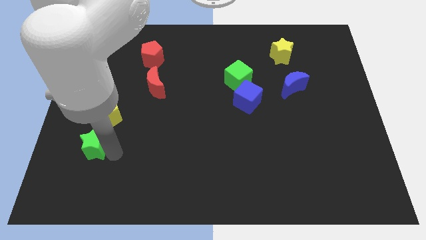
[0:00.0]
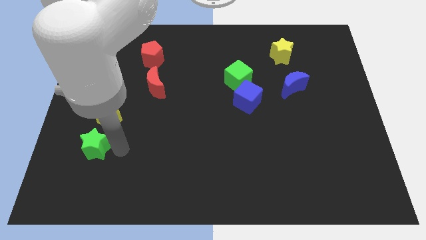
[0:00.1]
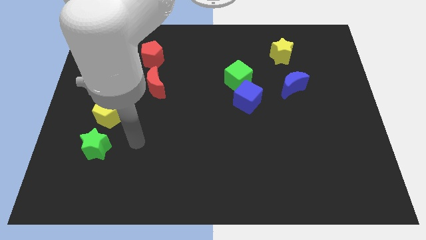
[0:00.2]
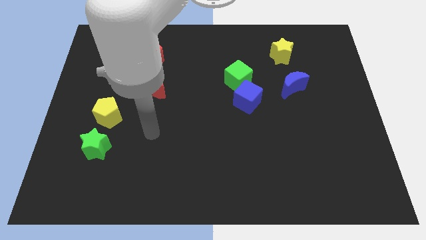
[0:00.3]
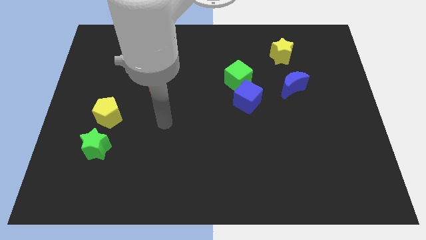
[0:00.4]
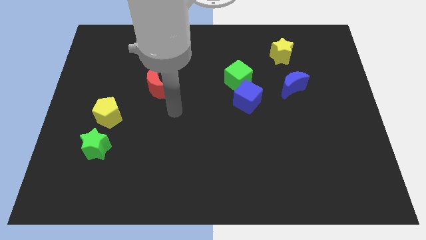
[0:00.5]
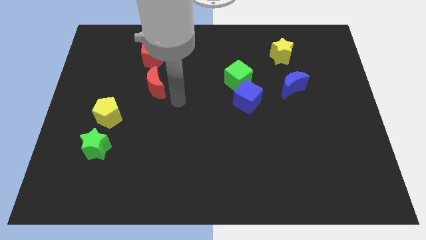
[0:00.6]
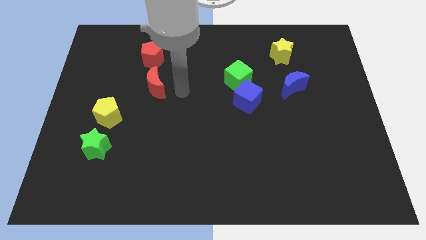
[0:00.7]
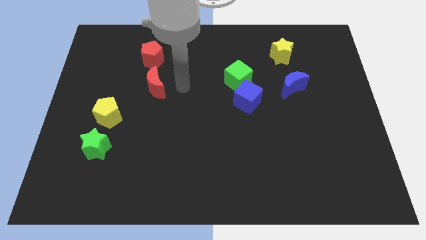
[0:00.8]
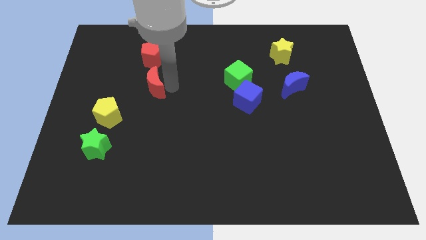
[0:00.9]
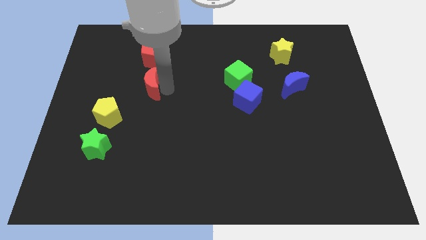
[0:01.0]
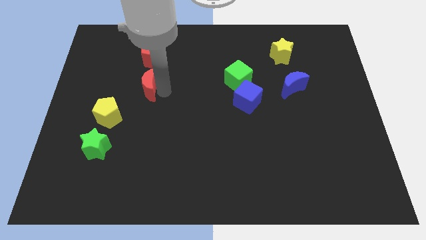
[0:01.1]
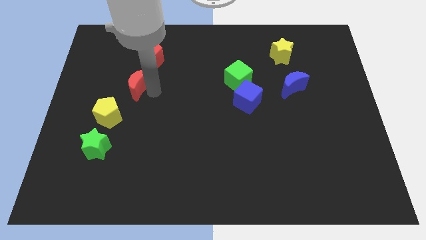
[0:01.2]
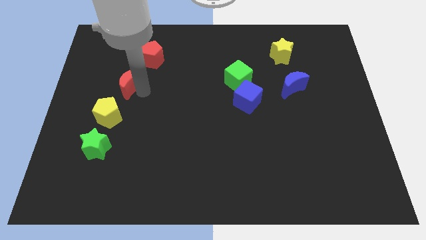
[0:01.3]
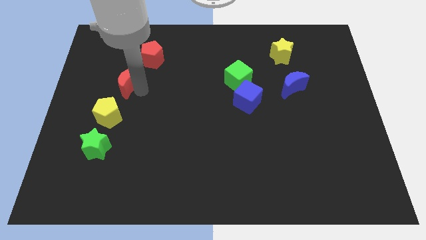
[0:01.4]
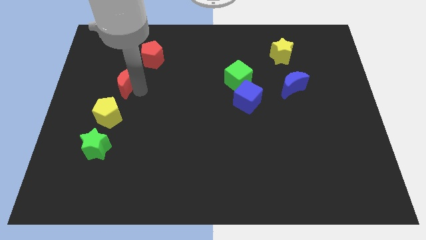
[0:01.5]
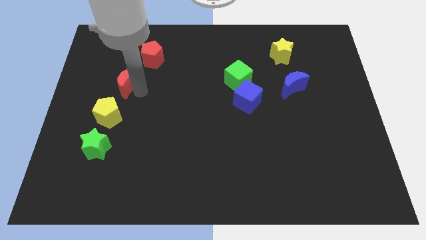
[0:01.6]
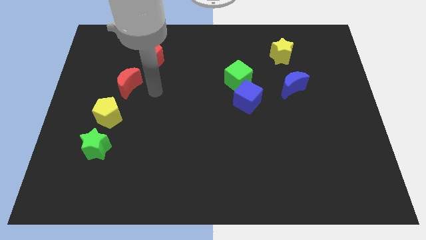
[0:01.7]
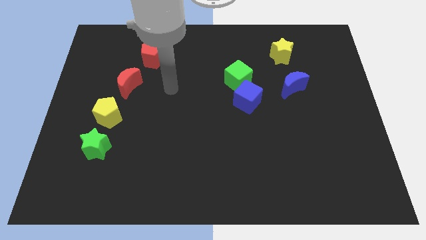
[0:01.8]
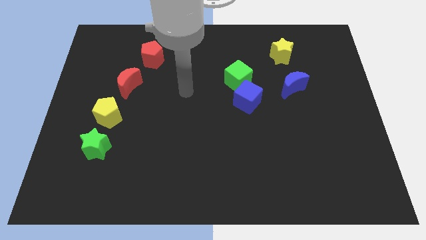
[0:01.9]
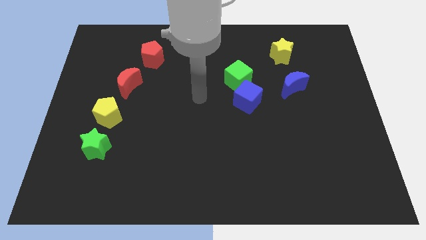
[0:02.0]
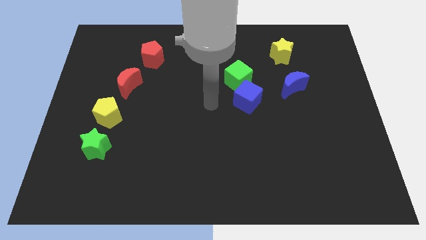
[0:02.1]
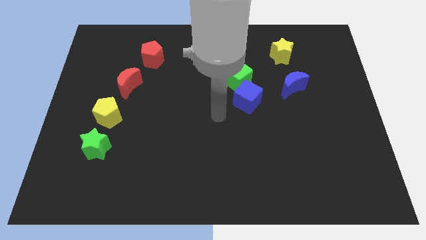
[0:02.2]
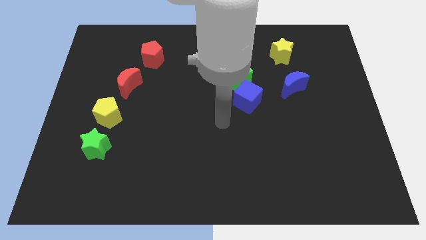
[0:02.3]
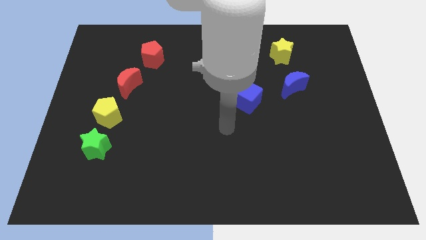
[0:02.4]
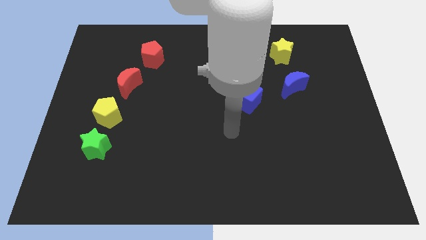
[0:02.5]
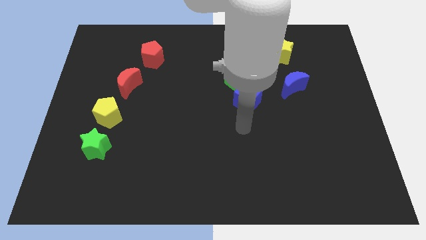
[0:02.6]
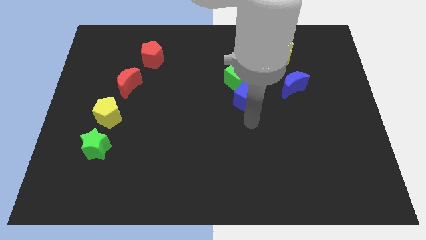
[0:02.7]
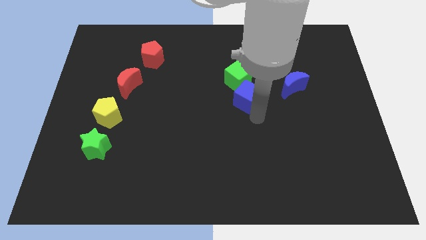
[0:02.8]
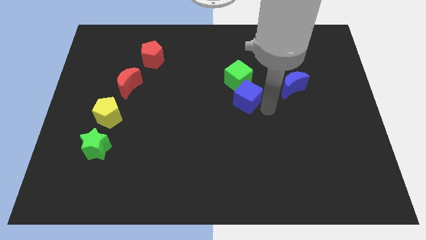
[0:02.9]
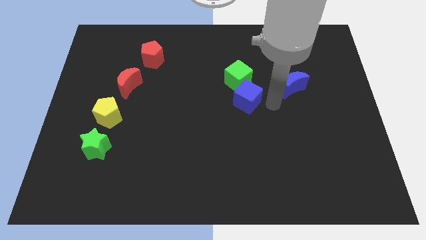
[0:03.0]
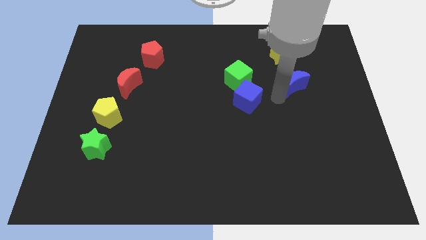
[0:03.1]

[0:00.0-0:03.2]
place the red moon between the diagonal line of blocks

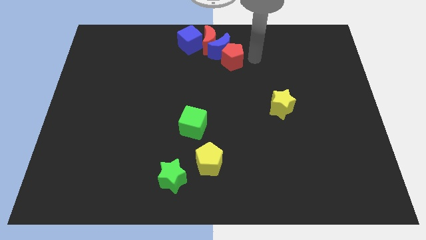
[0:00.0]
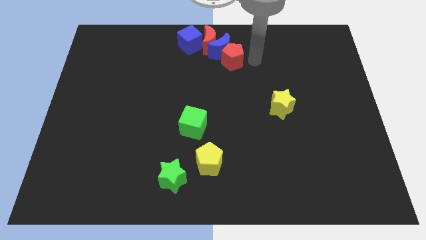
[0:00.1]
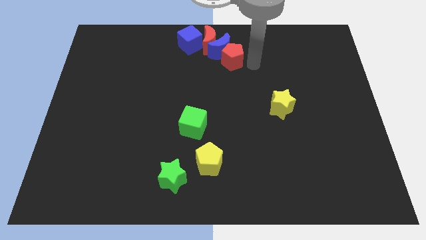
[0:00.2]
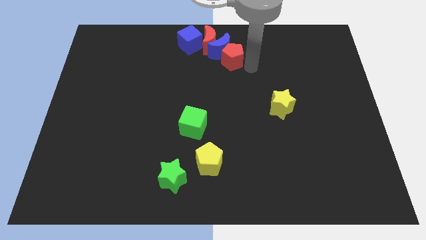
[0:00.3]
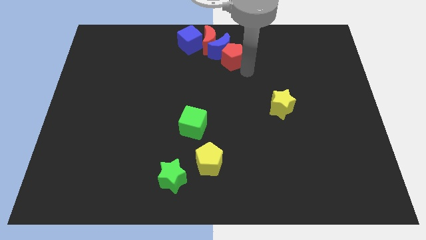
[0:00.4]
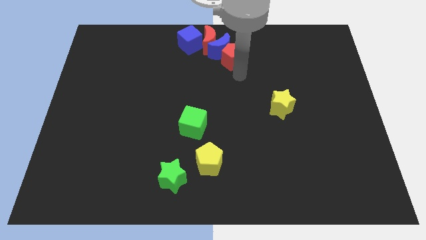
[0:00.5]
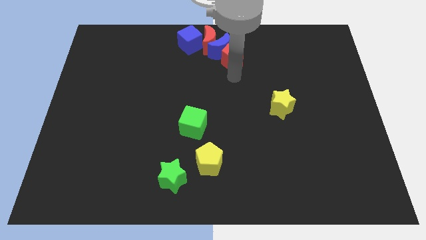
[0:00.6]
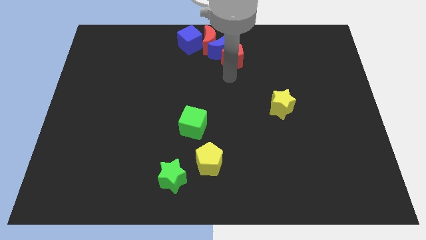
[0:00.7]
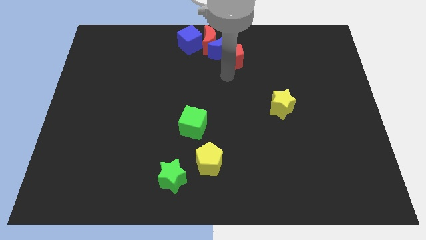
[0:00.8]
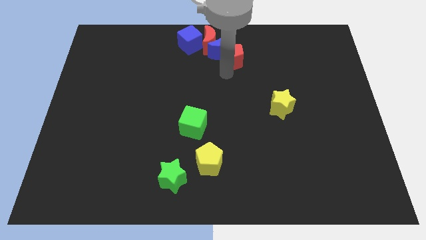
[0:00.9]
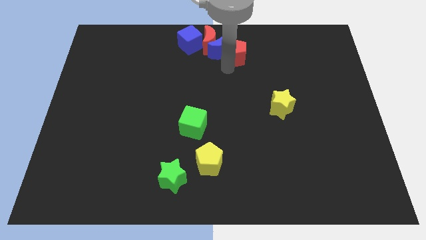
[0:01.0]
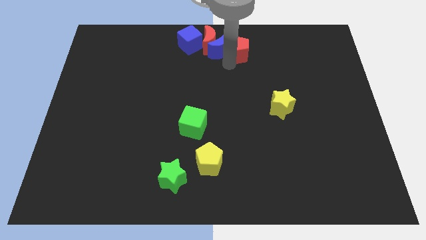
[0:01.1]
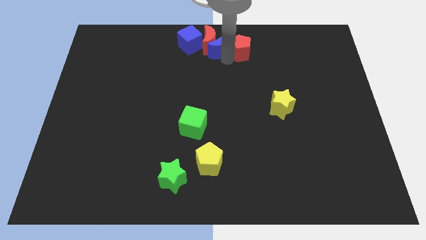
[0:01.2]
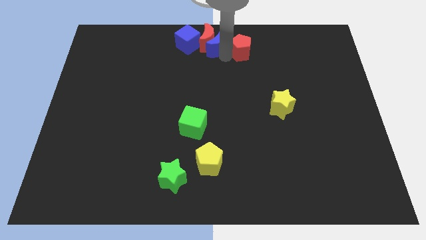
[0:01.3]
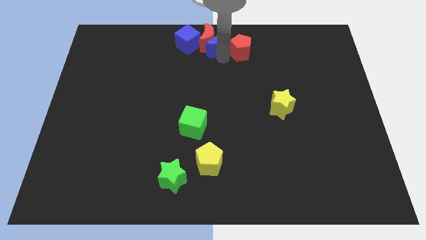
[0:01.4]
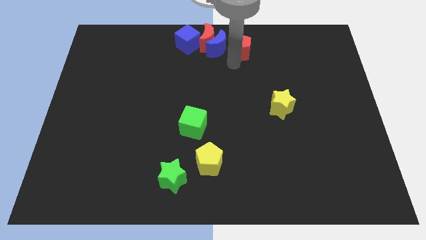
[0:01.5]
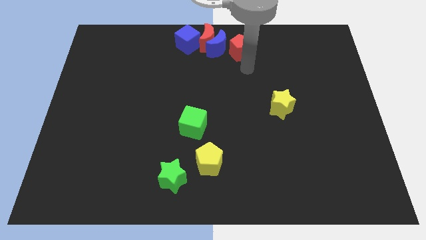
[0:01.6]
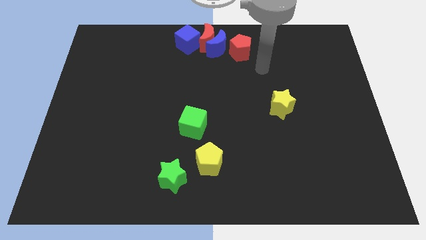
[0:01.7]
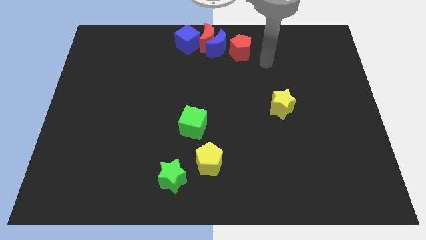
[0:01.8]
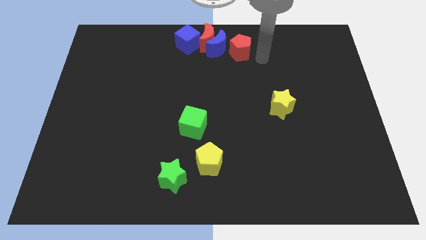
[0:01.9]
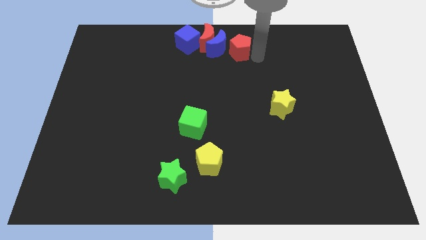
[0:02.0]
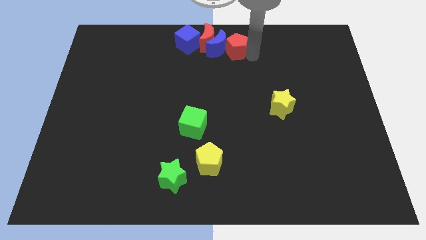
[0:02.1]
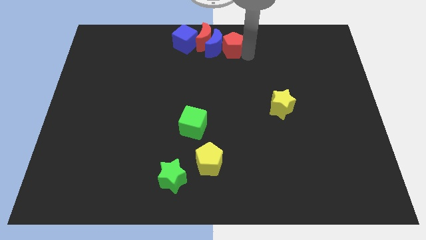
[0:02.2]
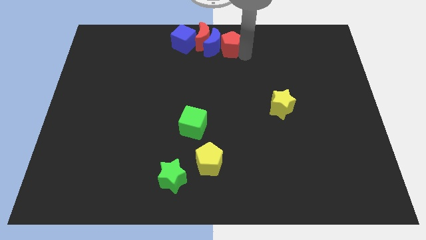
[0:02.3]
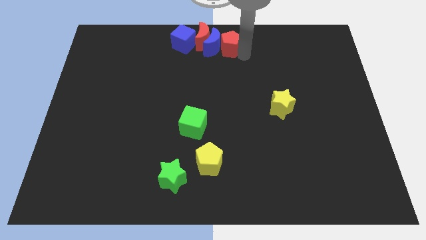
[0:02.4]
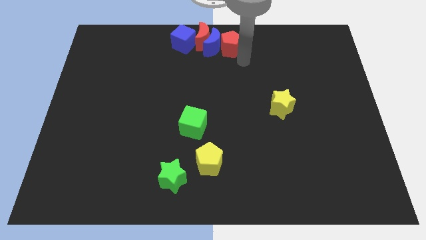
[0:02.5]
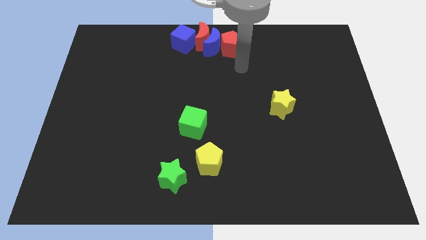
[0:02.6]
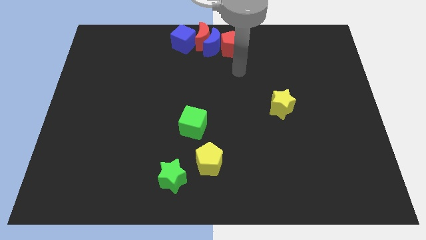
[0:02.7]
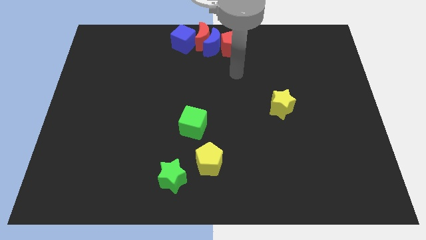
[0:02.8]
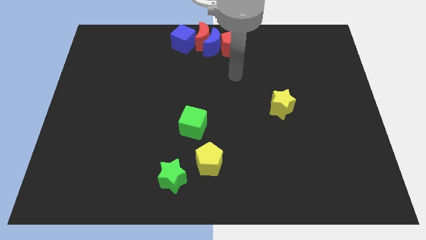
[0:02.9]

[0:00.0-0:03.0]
push group of blocks towards left side of the board

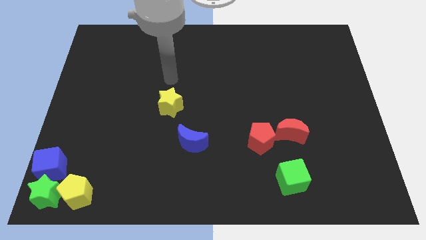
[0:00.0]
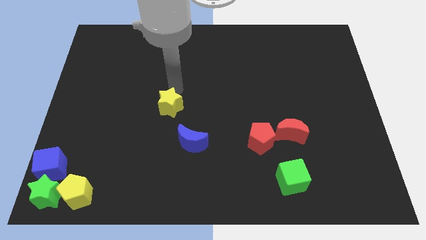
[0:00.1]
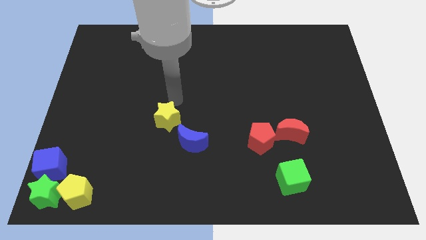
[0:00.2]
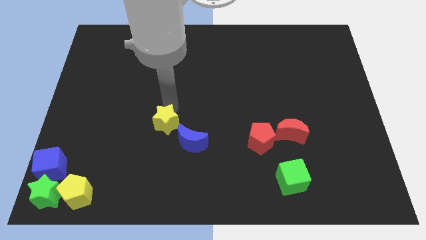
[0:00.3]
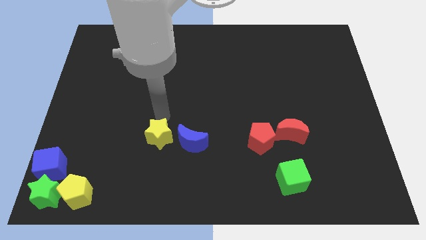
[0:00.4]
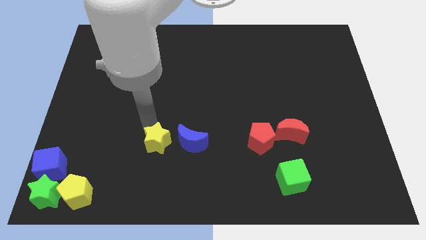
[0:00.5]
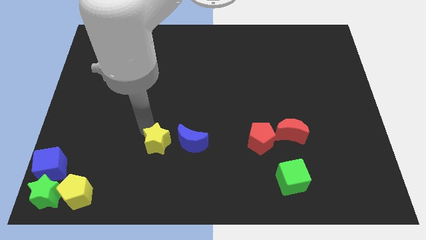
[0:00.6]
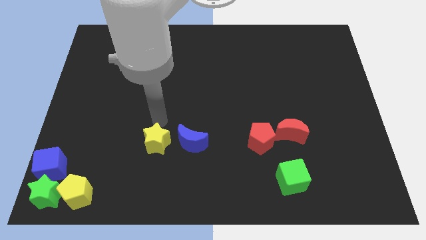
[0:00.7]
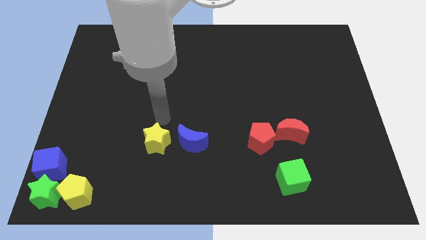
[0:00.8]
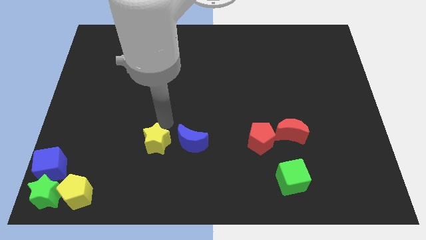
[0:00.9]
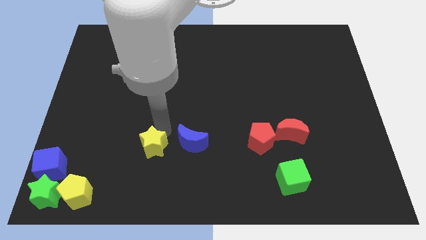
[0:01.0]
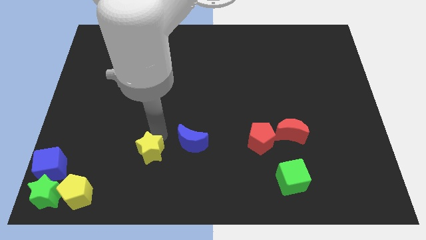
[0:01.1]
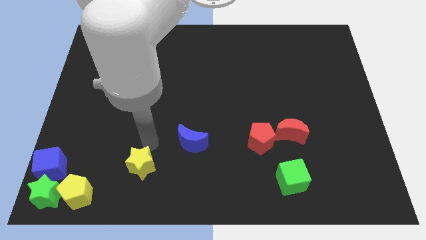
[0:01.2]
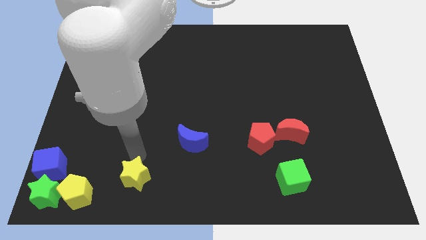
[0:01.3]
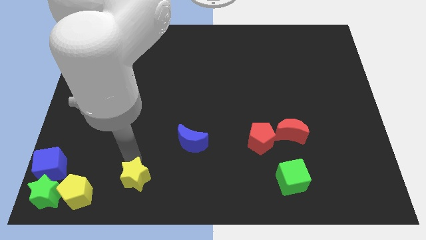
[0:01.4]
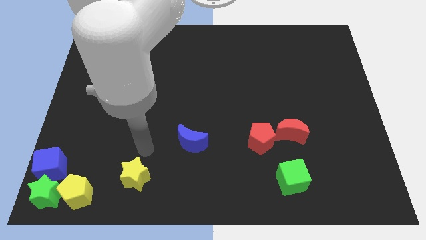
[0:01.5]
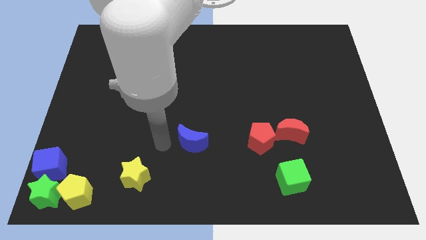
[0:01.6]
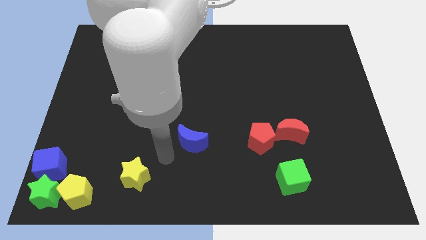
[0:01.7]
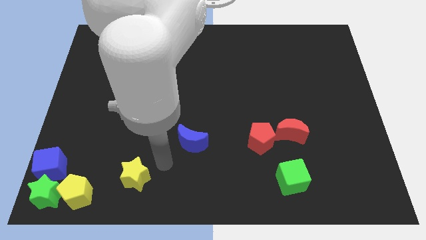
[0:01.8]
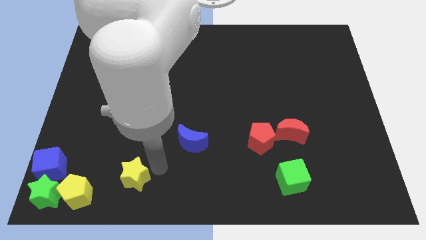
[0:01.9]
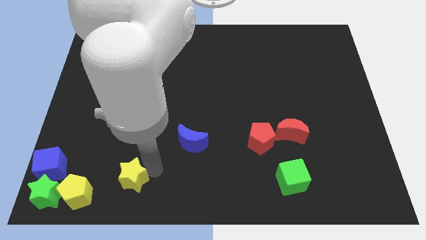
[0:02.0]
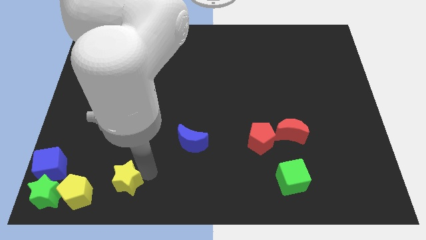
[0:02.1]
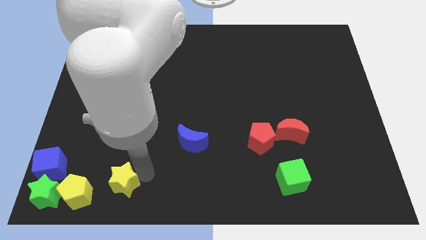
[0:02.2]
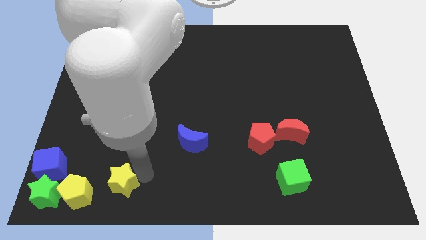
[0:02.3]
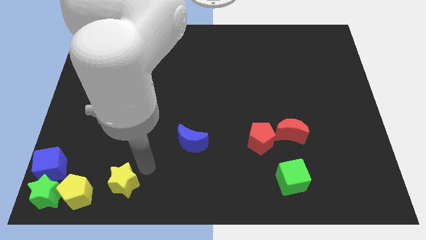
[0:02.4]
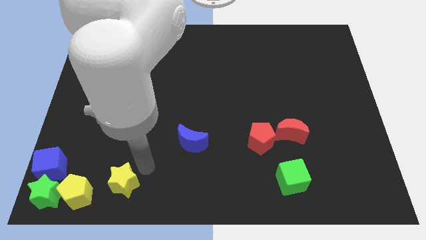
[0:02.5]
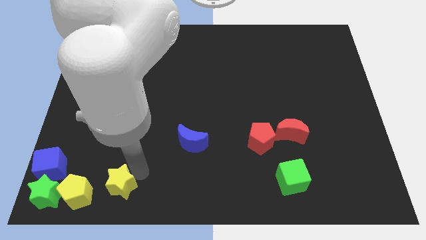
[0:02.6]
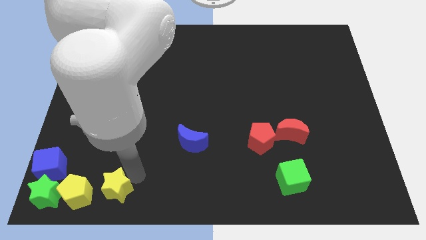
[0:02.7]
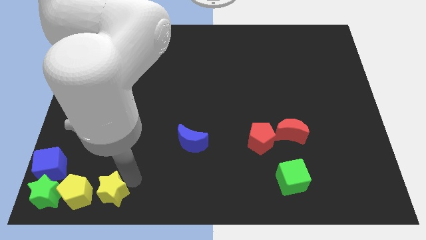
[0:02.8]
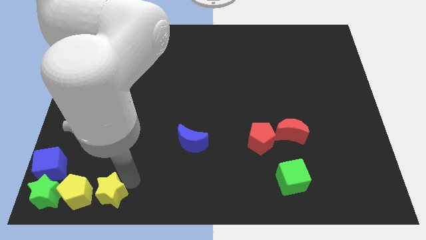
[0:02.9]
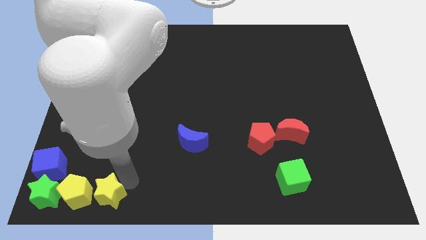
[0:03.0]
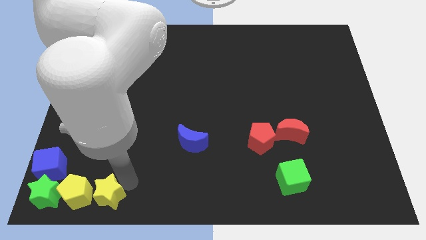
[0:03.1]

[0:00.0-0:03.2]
place a yellow star beside the yellow pentagon
